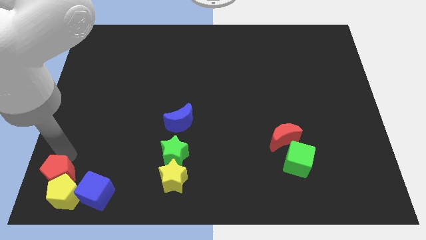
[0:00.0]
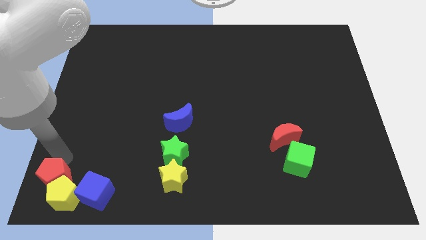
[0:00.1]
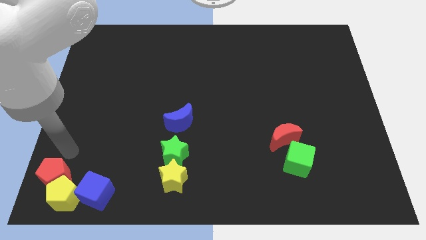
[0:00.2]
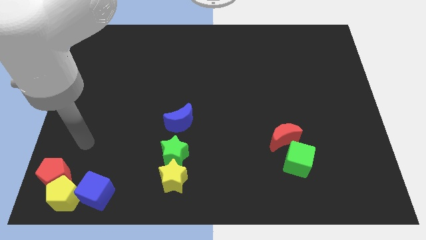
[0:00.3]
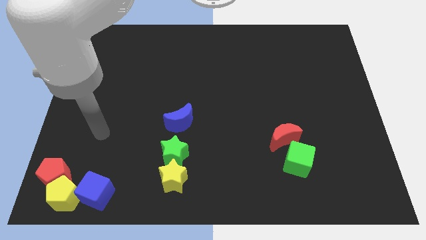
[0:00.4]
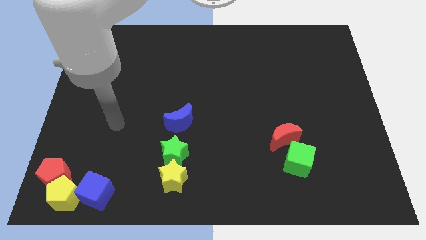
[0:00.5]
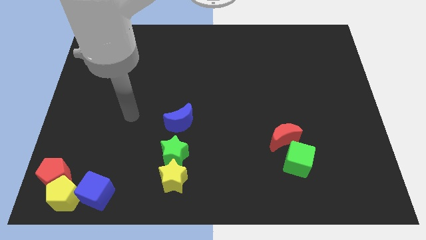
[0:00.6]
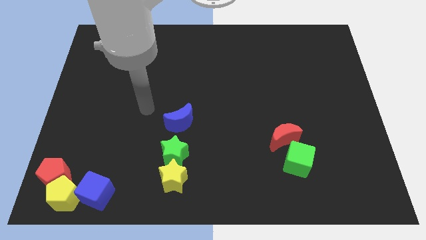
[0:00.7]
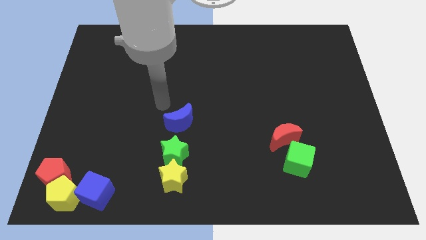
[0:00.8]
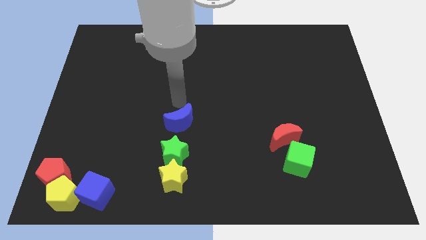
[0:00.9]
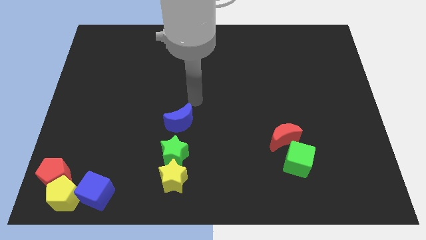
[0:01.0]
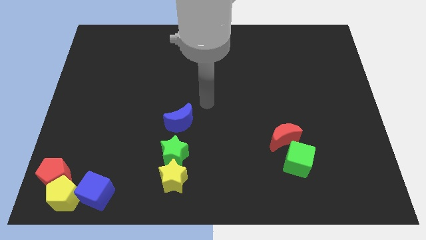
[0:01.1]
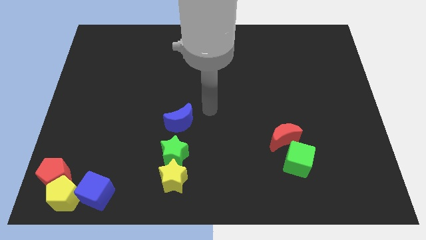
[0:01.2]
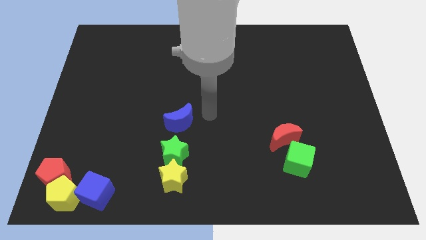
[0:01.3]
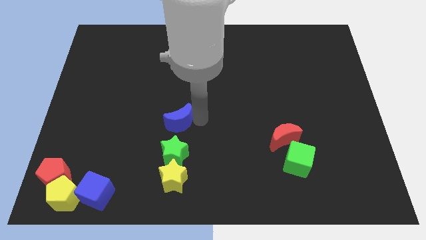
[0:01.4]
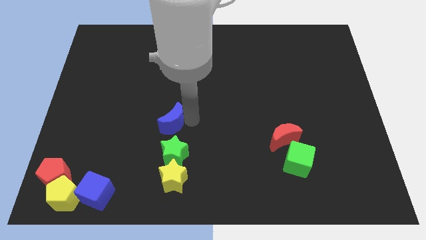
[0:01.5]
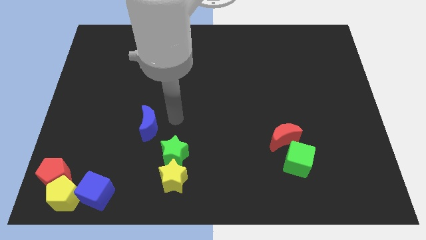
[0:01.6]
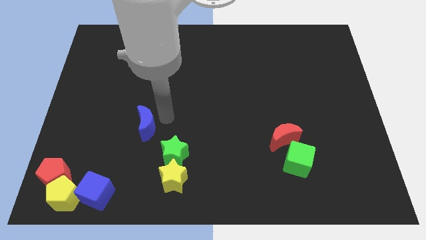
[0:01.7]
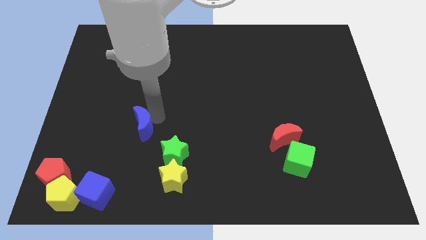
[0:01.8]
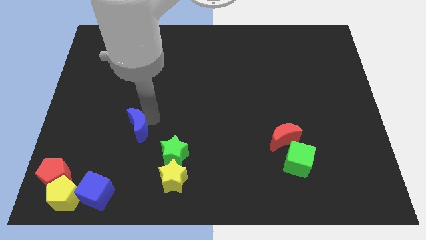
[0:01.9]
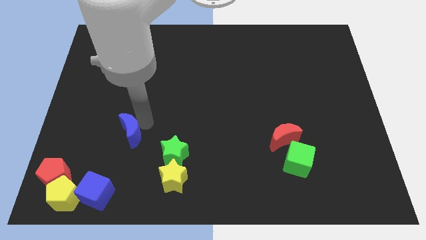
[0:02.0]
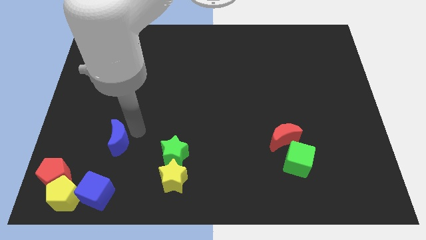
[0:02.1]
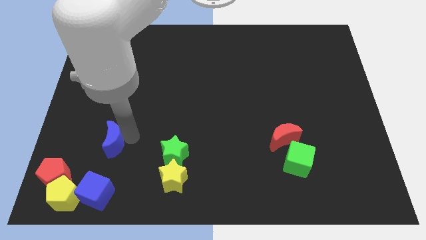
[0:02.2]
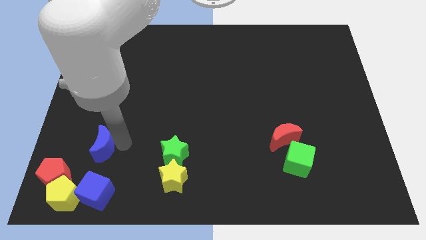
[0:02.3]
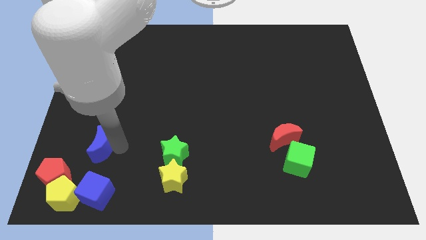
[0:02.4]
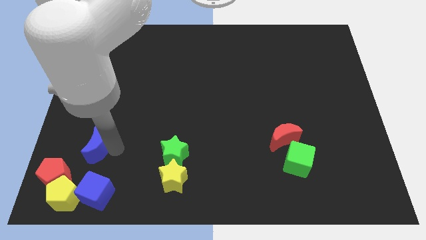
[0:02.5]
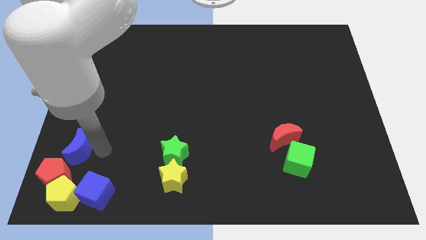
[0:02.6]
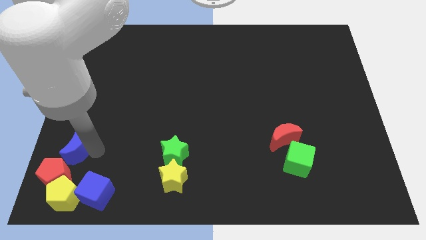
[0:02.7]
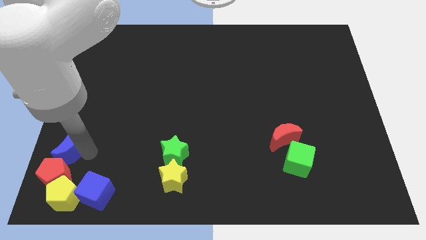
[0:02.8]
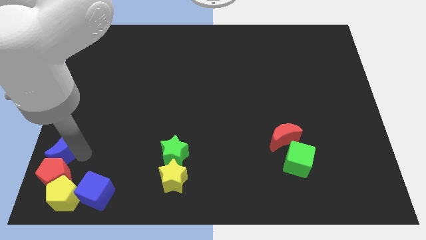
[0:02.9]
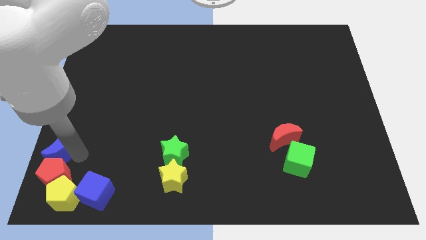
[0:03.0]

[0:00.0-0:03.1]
move blue moon into red pentagon

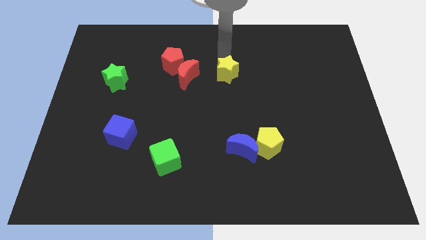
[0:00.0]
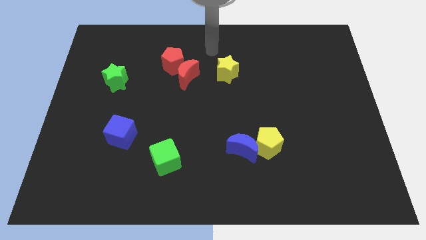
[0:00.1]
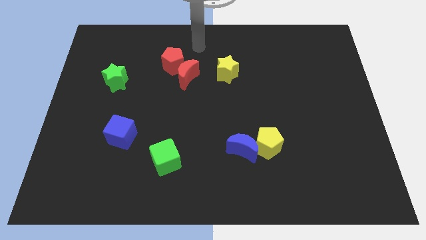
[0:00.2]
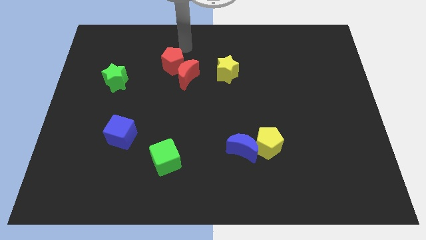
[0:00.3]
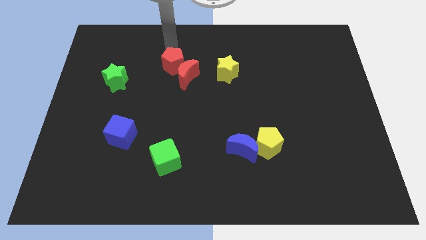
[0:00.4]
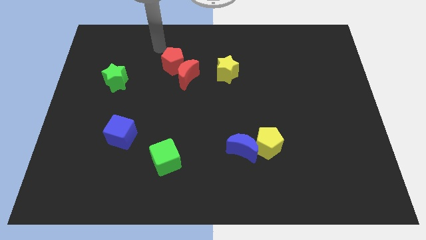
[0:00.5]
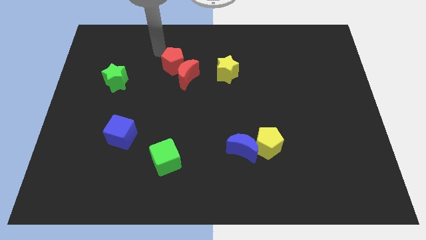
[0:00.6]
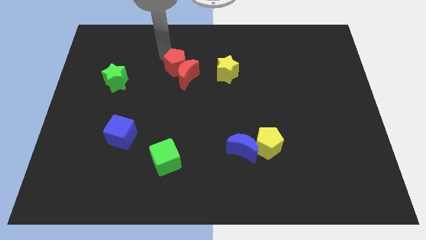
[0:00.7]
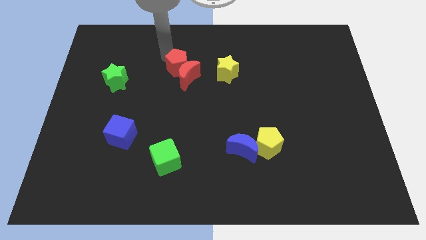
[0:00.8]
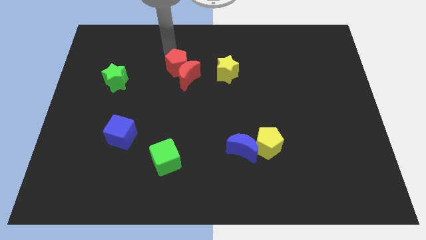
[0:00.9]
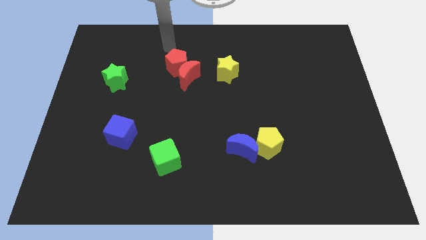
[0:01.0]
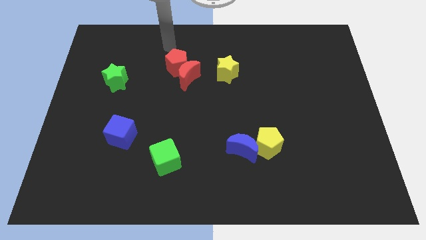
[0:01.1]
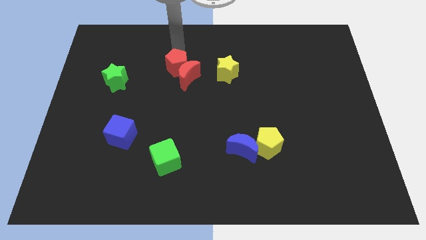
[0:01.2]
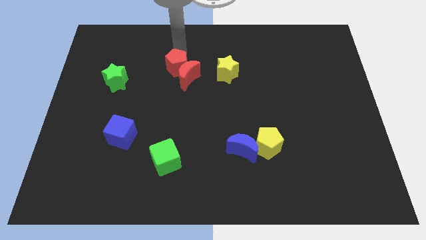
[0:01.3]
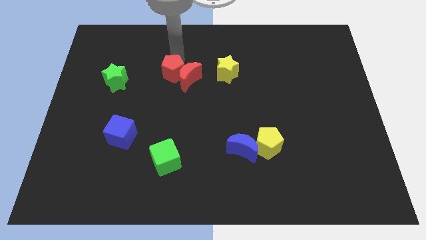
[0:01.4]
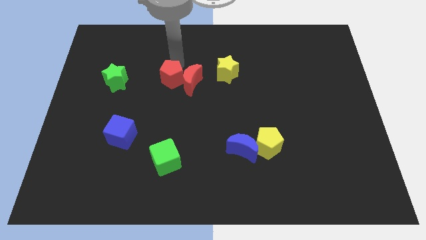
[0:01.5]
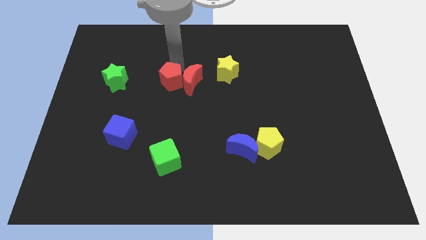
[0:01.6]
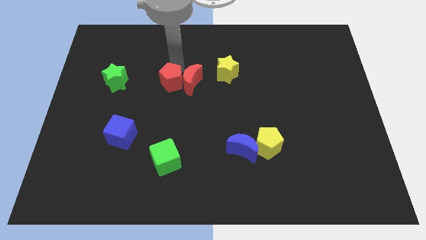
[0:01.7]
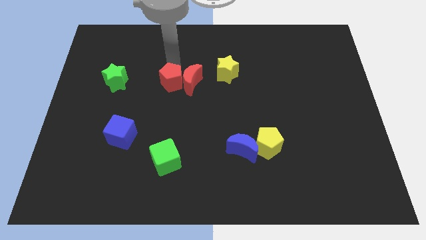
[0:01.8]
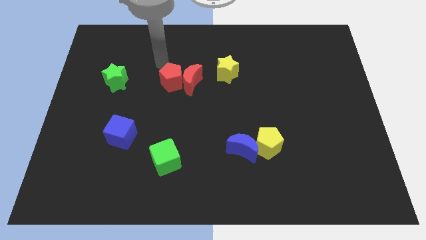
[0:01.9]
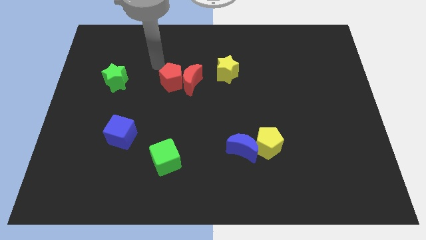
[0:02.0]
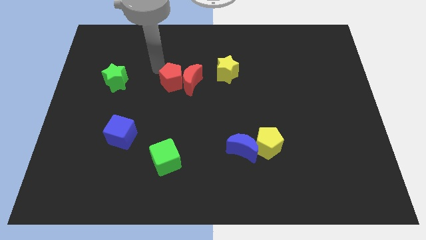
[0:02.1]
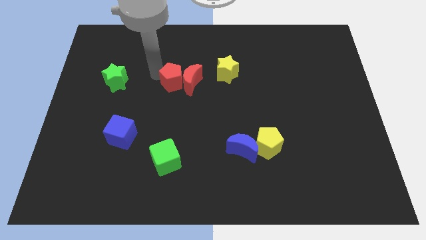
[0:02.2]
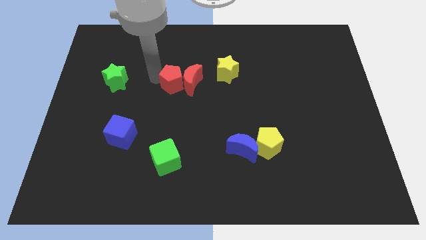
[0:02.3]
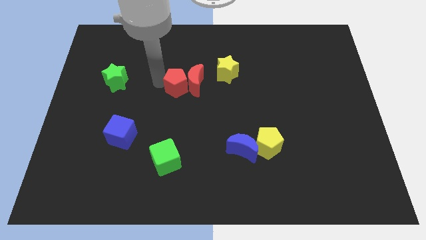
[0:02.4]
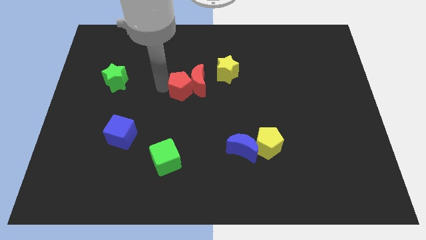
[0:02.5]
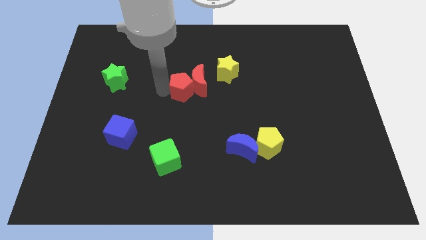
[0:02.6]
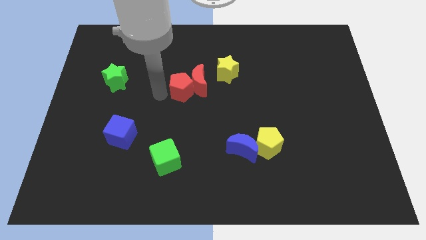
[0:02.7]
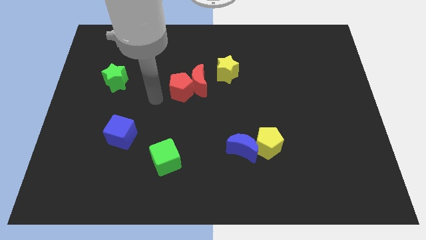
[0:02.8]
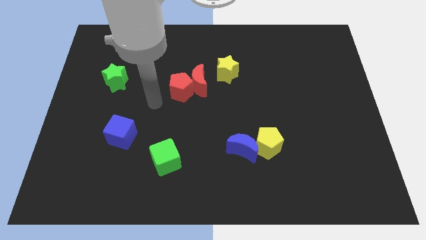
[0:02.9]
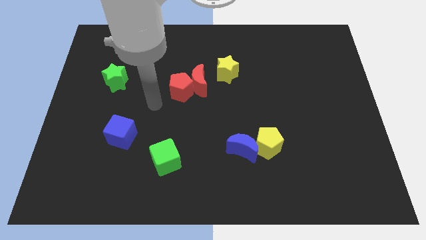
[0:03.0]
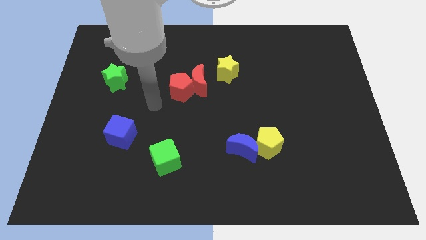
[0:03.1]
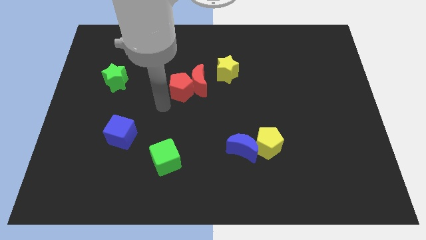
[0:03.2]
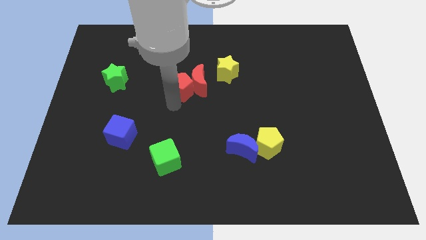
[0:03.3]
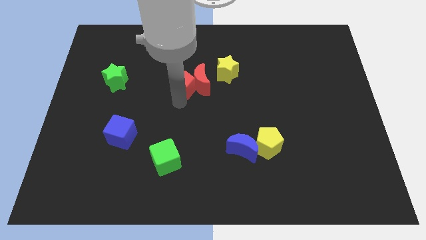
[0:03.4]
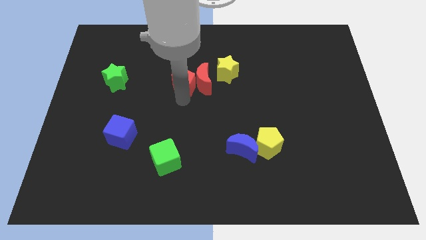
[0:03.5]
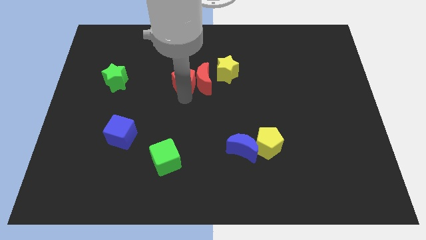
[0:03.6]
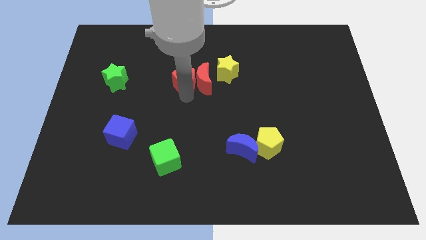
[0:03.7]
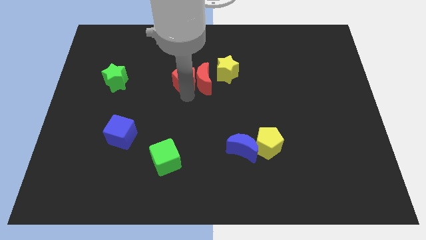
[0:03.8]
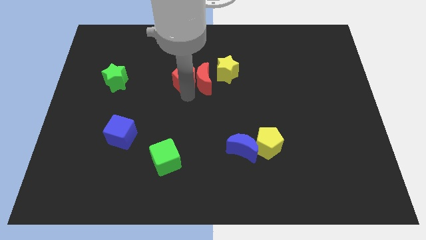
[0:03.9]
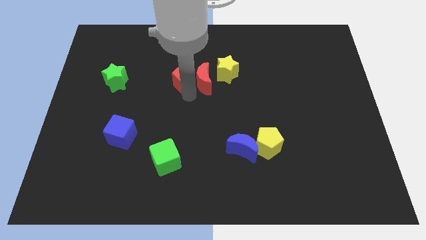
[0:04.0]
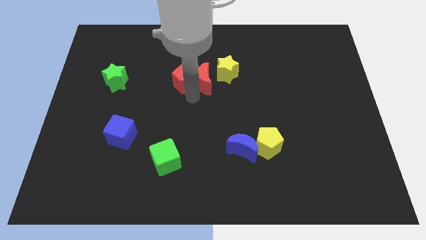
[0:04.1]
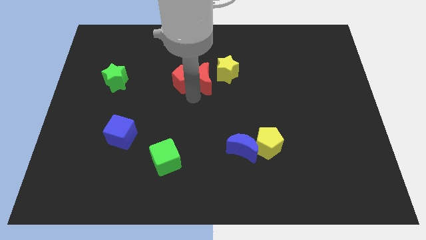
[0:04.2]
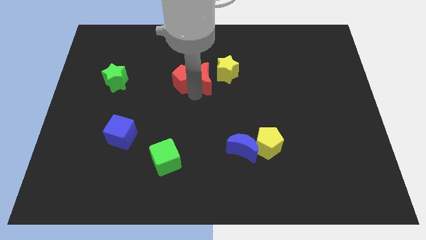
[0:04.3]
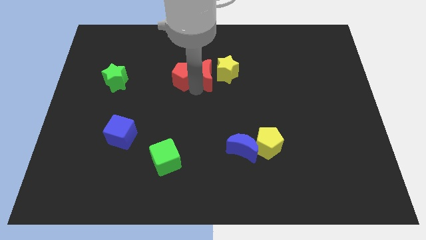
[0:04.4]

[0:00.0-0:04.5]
place the red blocks to the left of the yellow star

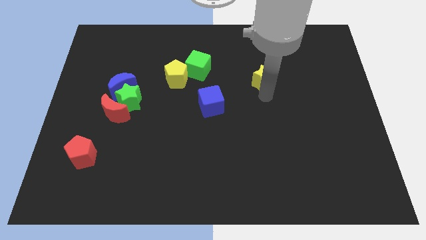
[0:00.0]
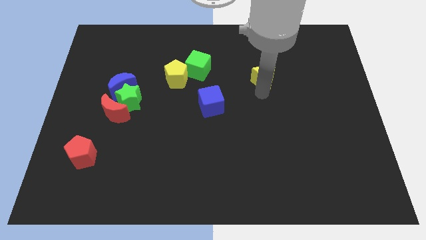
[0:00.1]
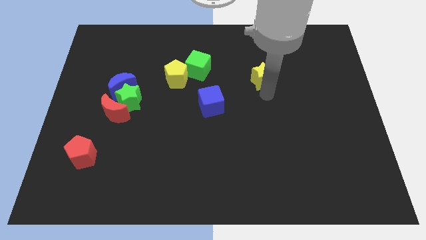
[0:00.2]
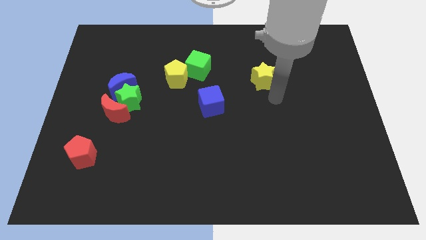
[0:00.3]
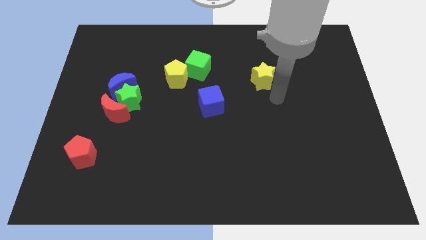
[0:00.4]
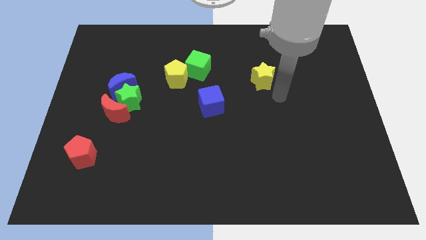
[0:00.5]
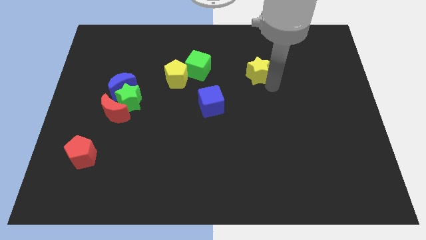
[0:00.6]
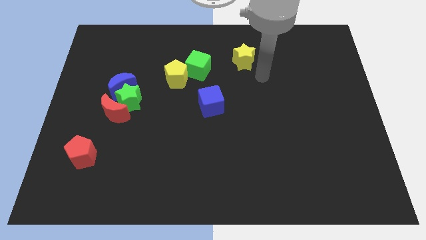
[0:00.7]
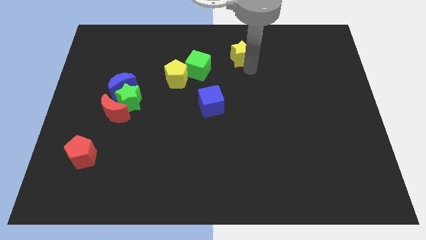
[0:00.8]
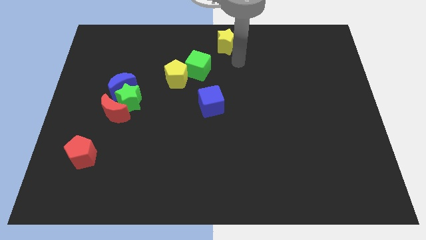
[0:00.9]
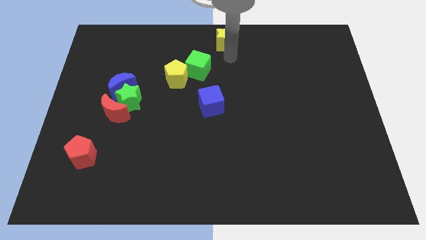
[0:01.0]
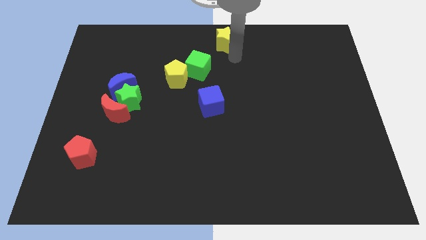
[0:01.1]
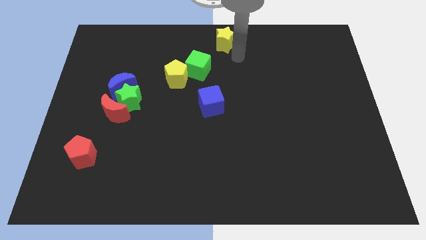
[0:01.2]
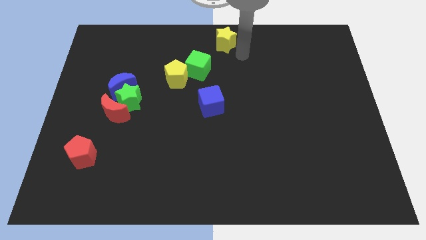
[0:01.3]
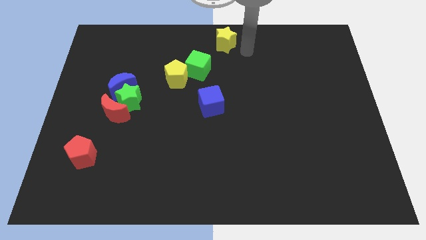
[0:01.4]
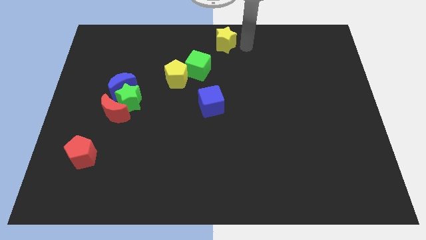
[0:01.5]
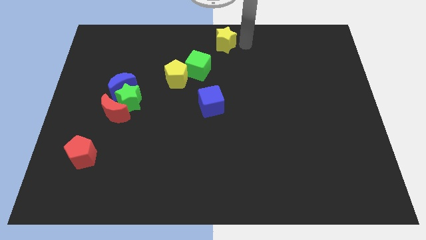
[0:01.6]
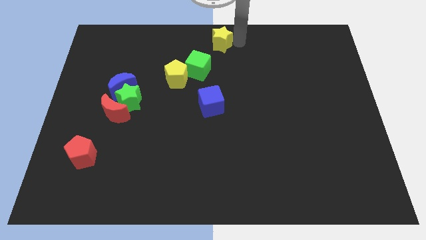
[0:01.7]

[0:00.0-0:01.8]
push the yellow star to the top center of the board
